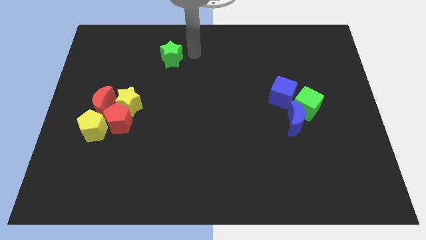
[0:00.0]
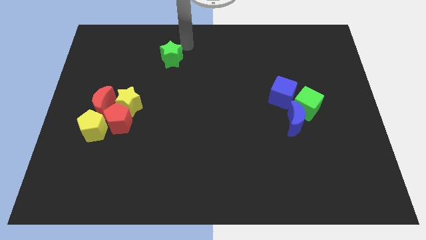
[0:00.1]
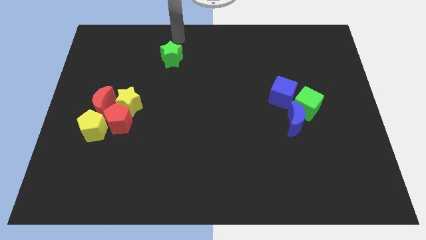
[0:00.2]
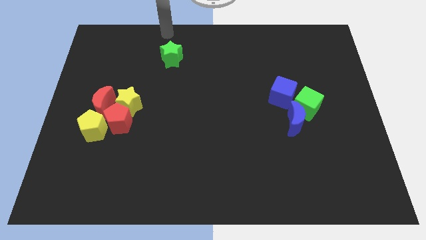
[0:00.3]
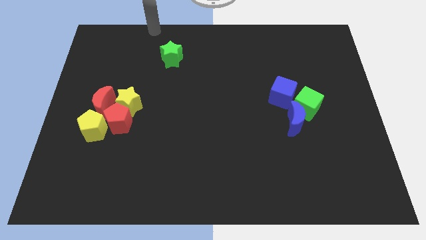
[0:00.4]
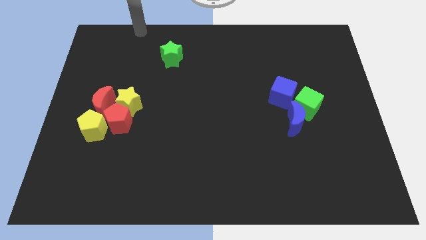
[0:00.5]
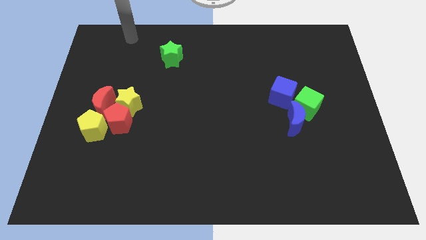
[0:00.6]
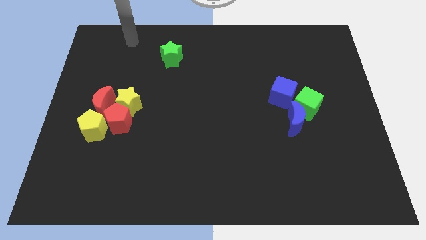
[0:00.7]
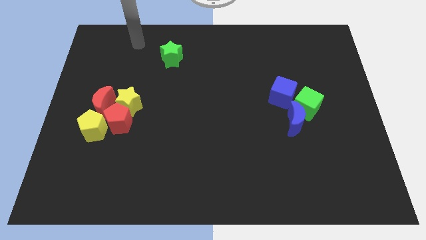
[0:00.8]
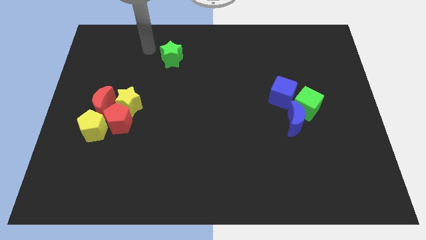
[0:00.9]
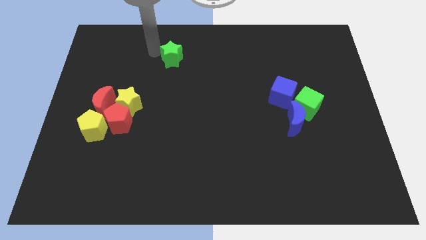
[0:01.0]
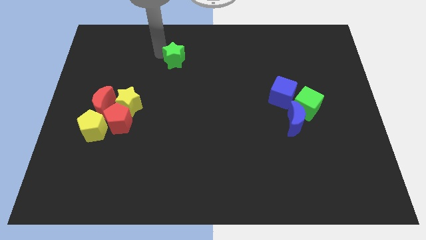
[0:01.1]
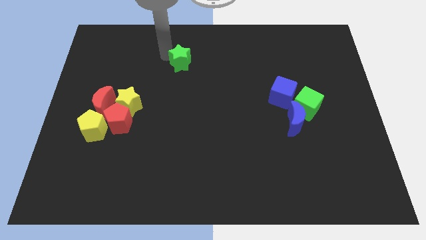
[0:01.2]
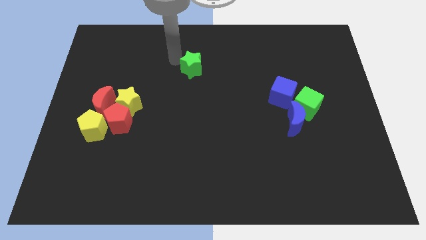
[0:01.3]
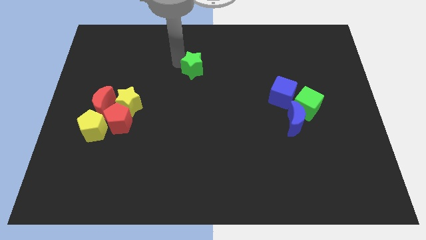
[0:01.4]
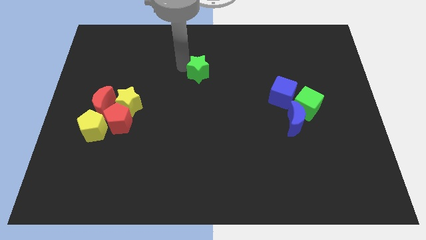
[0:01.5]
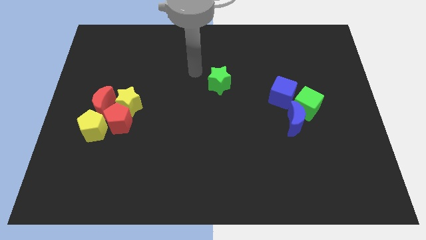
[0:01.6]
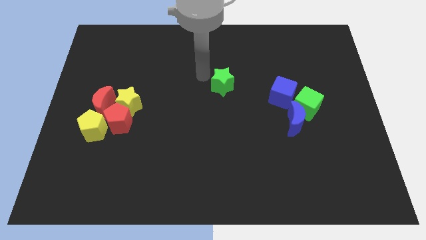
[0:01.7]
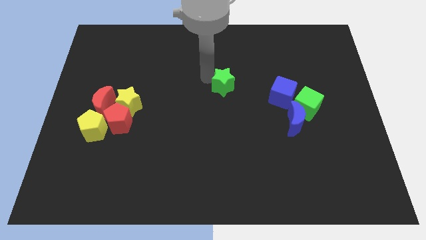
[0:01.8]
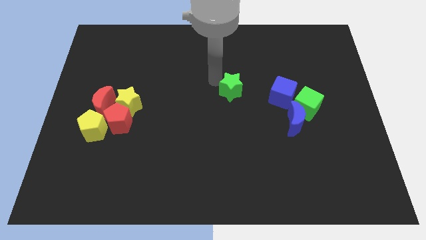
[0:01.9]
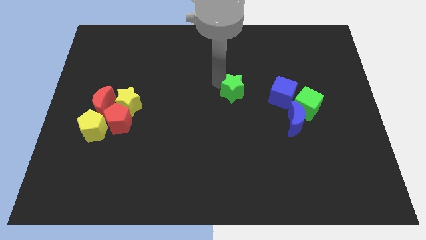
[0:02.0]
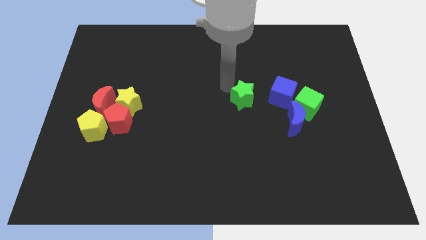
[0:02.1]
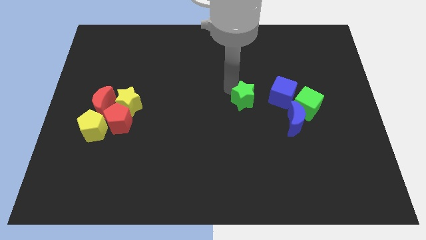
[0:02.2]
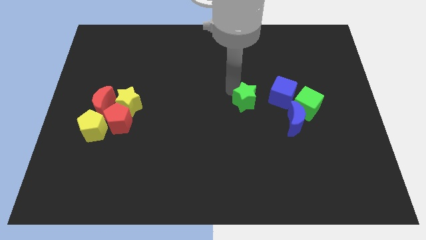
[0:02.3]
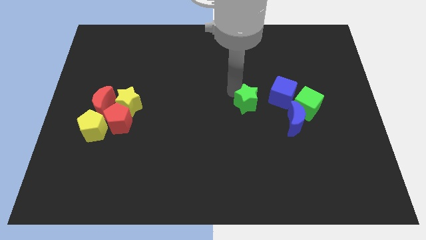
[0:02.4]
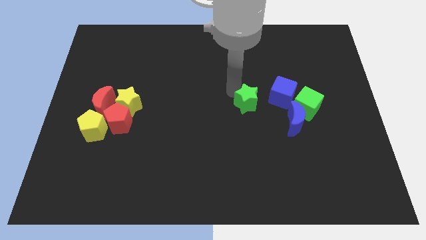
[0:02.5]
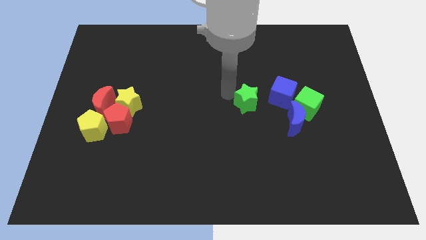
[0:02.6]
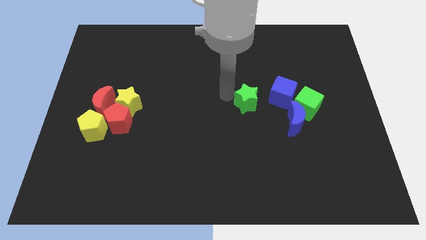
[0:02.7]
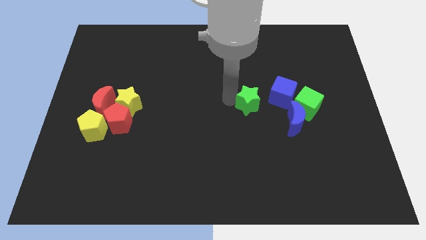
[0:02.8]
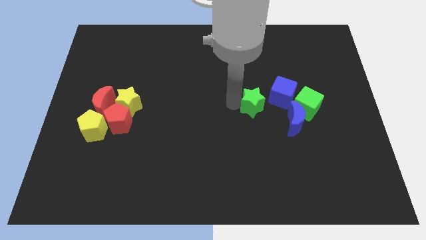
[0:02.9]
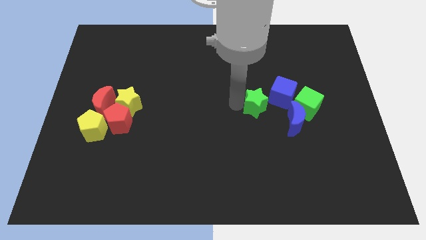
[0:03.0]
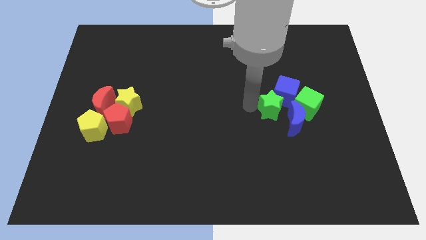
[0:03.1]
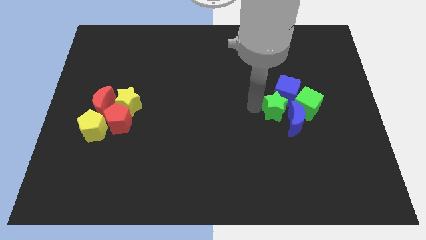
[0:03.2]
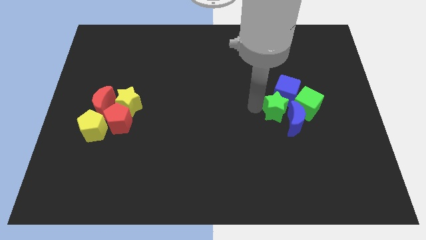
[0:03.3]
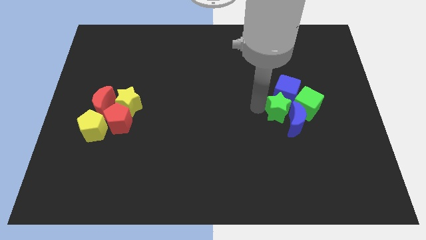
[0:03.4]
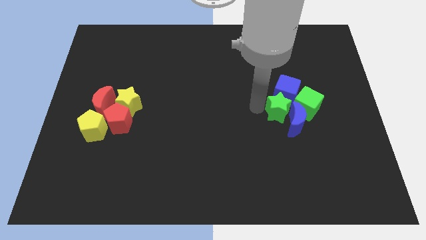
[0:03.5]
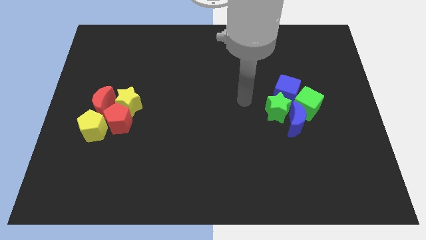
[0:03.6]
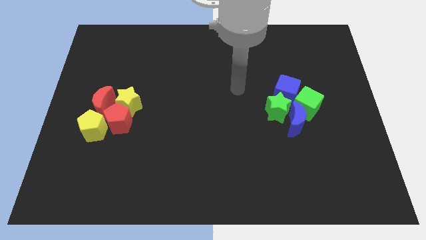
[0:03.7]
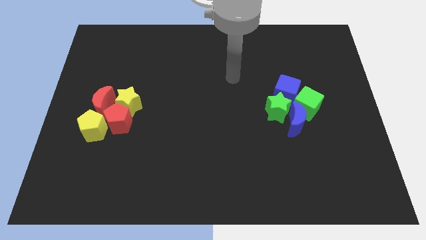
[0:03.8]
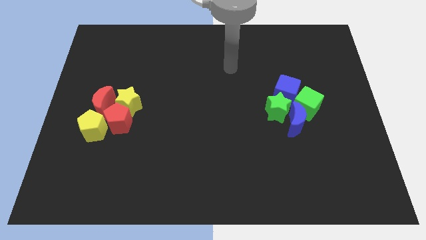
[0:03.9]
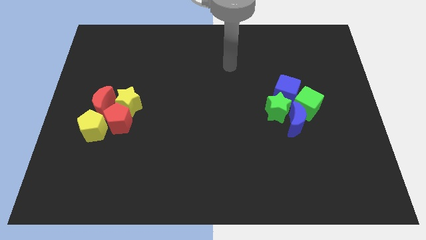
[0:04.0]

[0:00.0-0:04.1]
push the green star into the blue moon

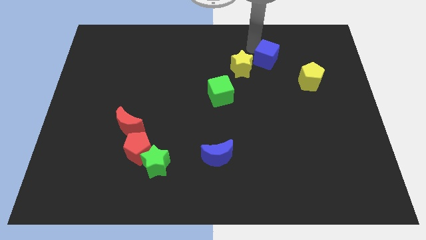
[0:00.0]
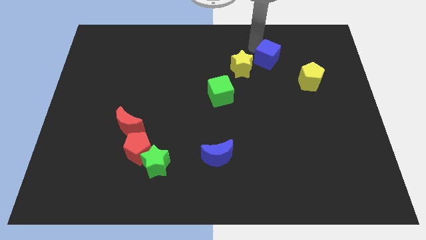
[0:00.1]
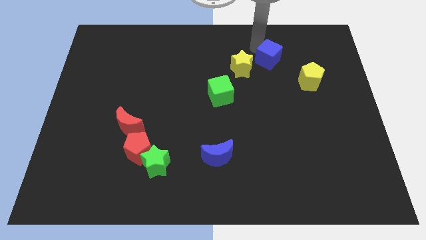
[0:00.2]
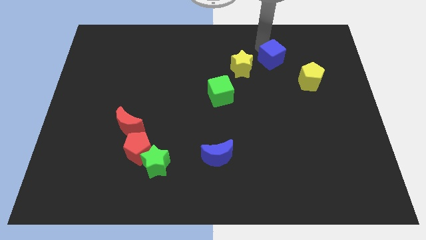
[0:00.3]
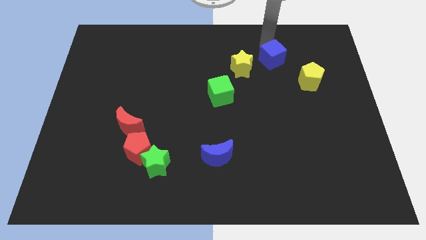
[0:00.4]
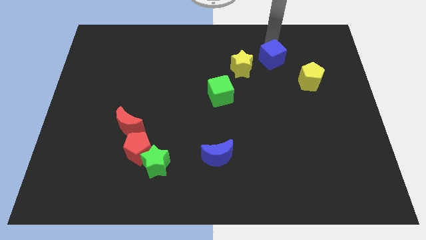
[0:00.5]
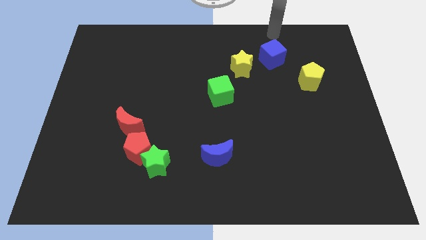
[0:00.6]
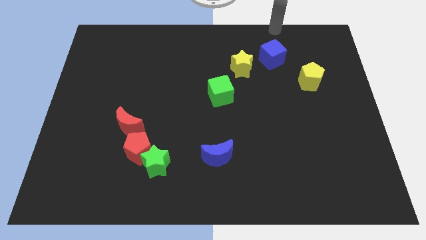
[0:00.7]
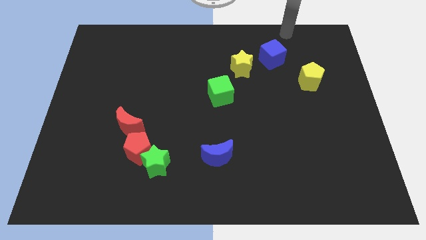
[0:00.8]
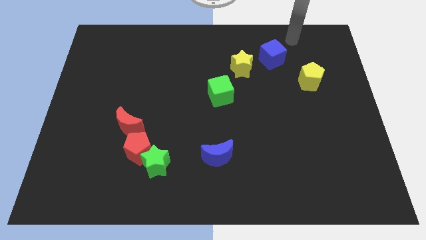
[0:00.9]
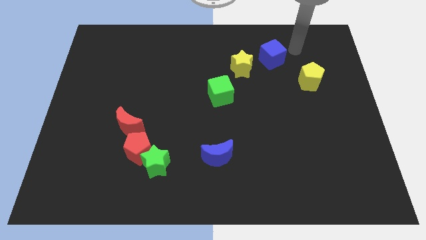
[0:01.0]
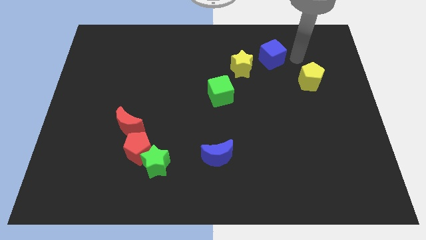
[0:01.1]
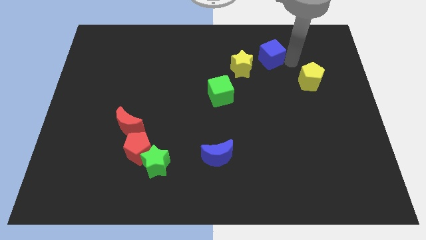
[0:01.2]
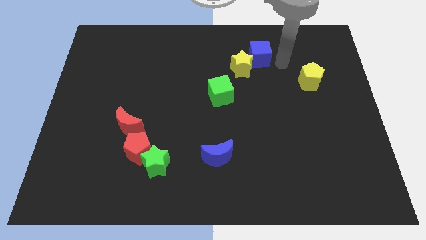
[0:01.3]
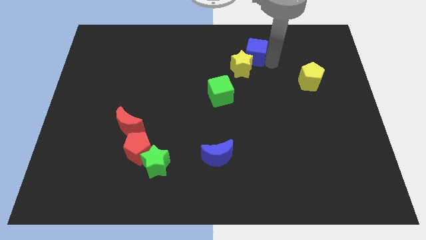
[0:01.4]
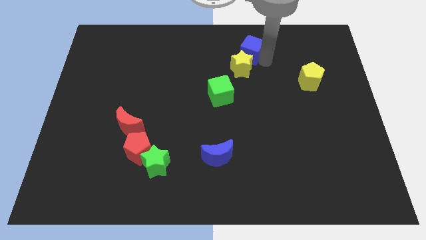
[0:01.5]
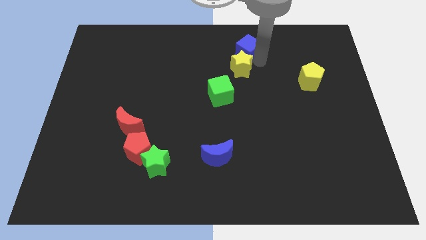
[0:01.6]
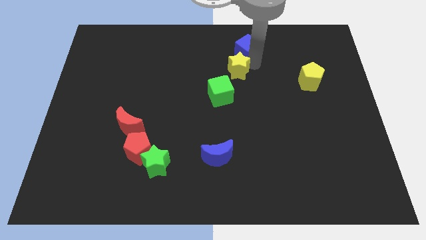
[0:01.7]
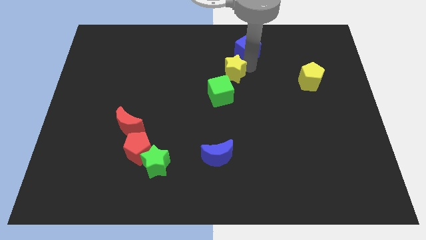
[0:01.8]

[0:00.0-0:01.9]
place the yellow star in between green cube and blue cube

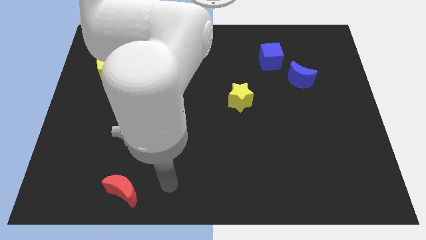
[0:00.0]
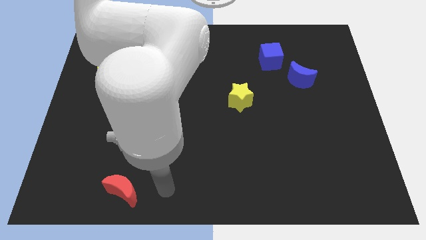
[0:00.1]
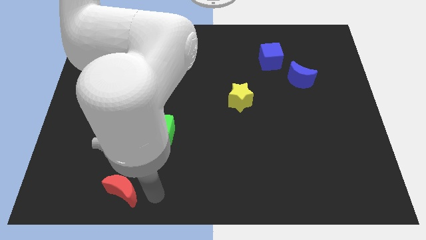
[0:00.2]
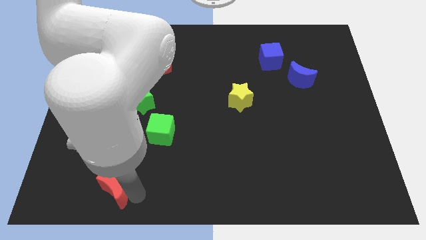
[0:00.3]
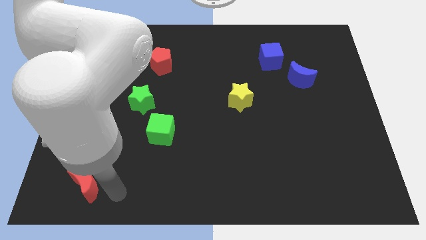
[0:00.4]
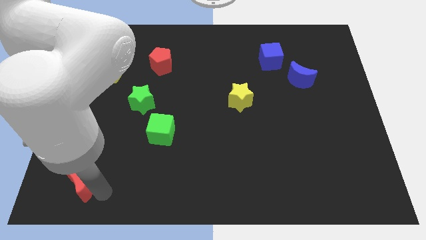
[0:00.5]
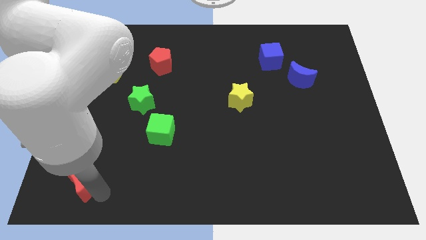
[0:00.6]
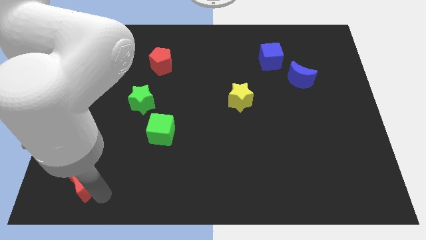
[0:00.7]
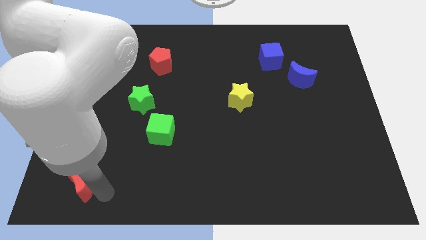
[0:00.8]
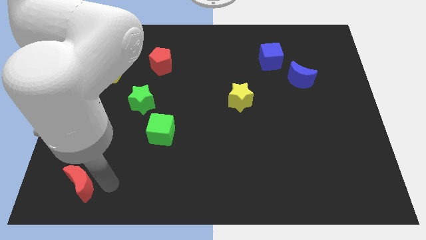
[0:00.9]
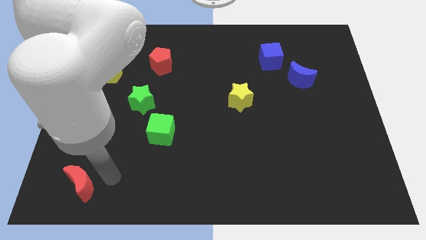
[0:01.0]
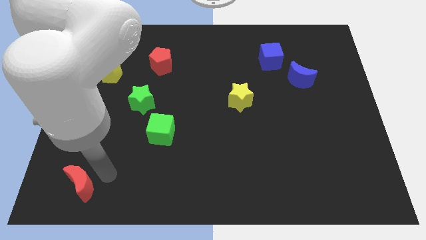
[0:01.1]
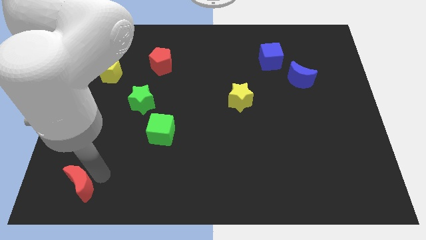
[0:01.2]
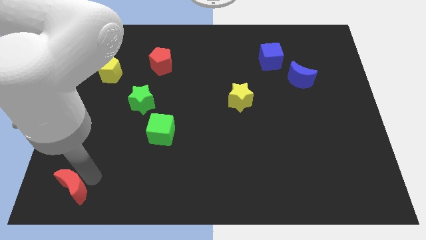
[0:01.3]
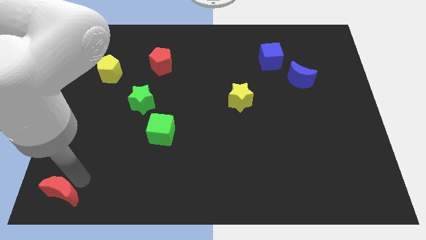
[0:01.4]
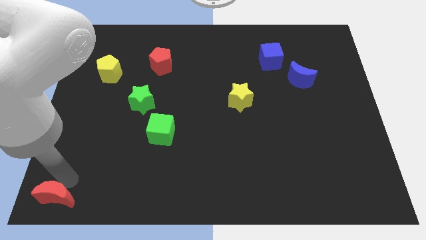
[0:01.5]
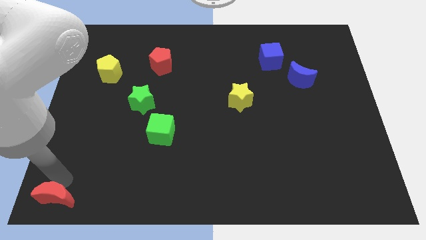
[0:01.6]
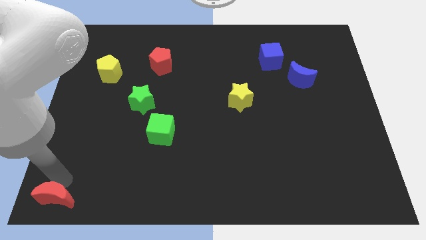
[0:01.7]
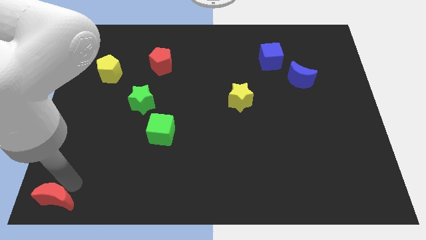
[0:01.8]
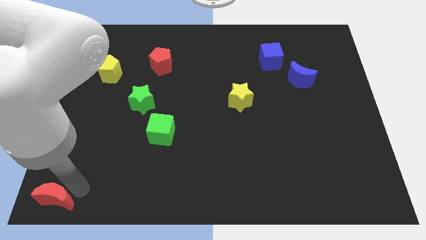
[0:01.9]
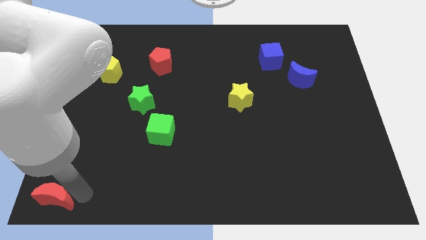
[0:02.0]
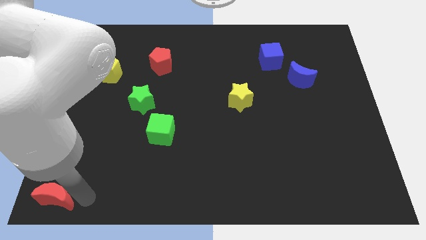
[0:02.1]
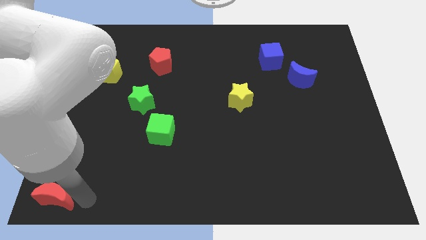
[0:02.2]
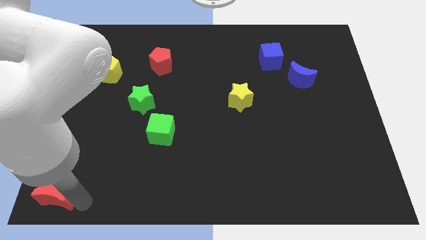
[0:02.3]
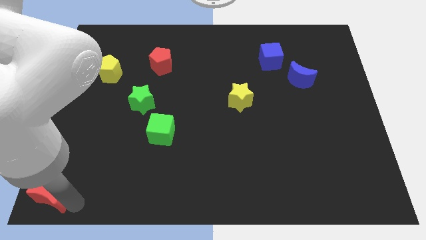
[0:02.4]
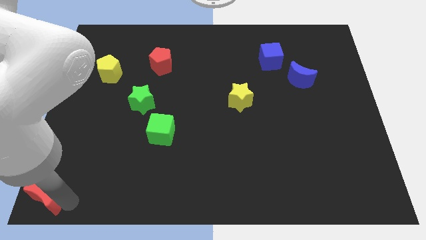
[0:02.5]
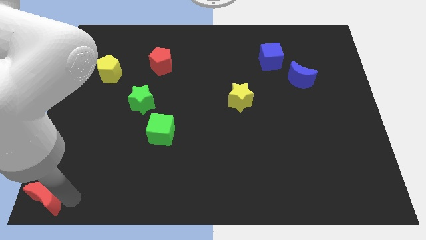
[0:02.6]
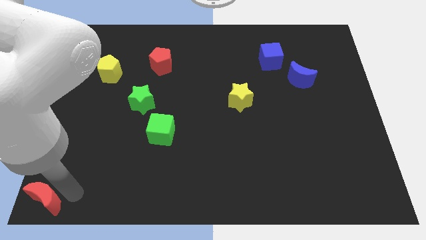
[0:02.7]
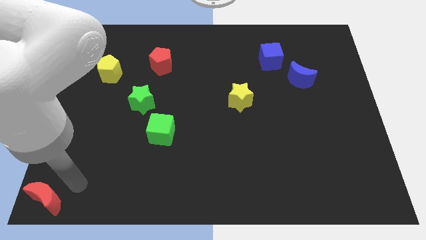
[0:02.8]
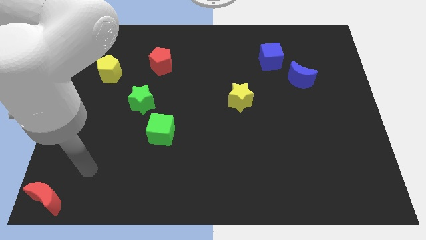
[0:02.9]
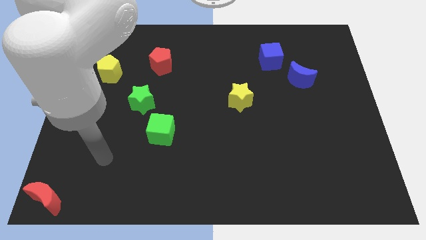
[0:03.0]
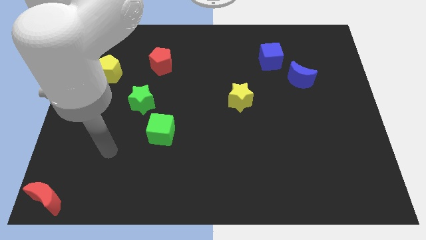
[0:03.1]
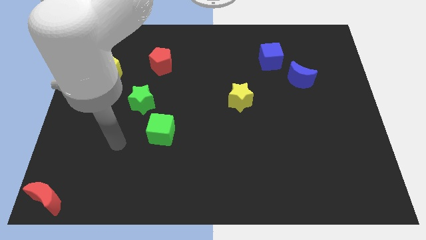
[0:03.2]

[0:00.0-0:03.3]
push the red moon to the bottom left of the board
